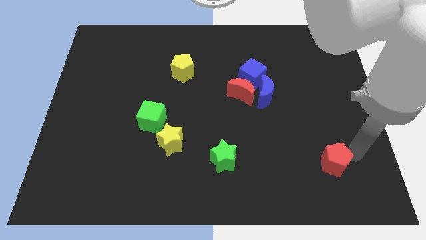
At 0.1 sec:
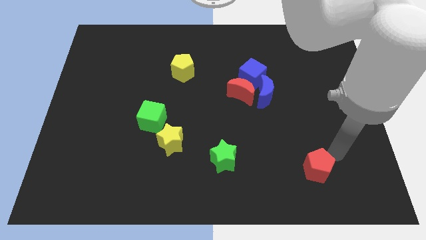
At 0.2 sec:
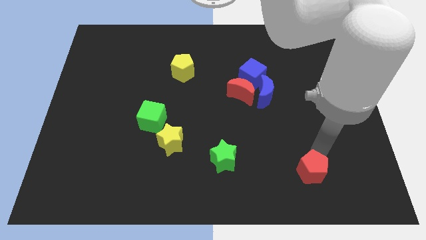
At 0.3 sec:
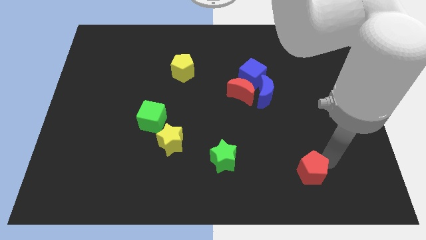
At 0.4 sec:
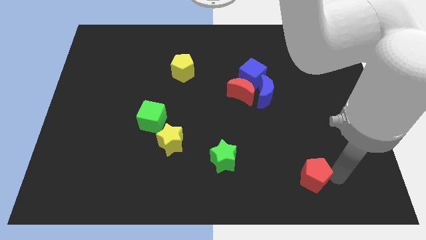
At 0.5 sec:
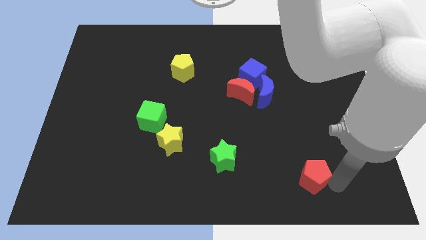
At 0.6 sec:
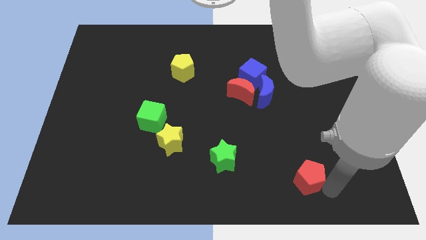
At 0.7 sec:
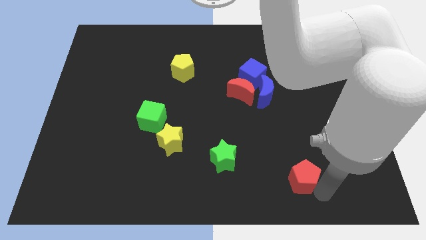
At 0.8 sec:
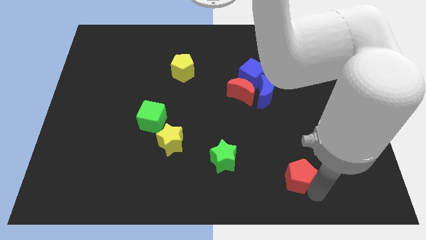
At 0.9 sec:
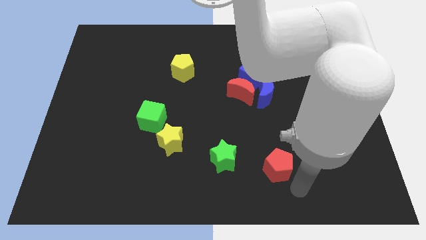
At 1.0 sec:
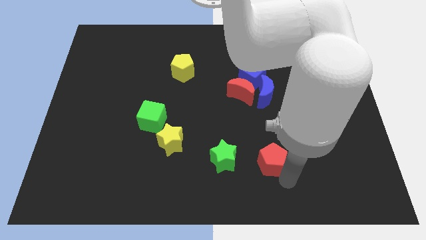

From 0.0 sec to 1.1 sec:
move the red pentagon to the right of the green star

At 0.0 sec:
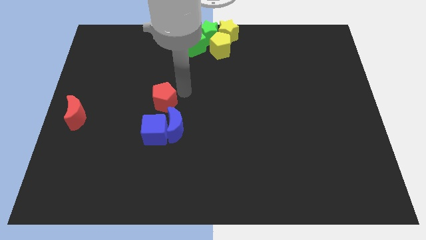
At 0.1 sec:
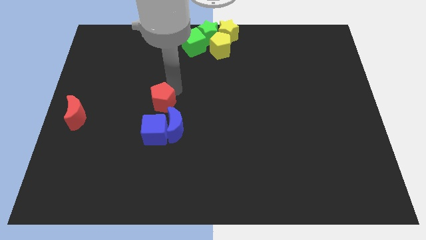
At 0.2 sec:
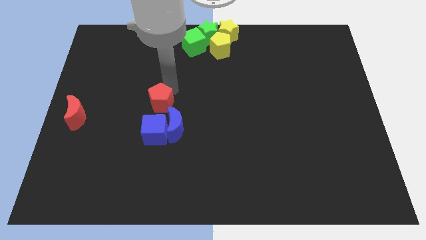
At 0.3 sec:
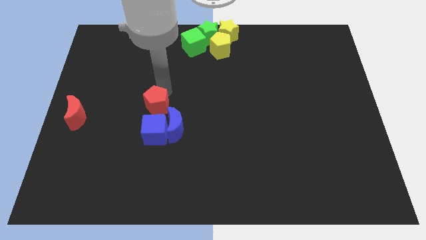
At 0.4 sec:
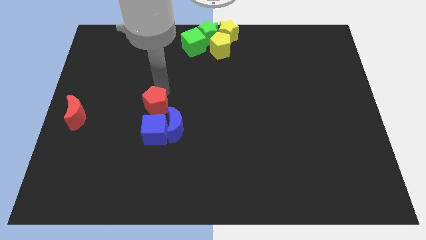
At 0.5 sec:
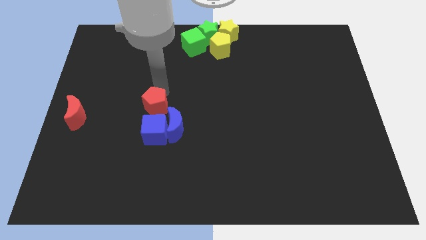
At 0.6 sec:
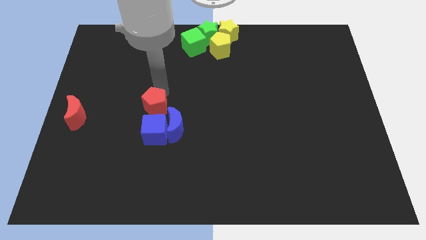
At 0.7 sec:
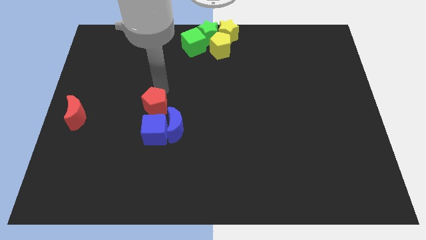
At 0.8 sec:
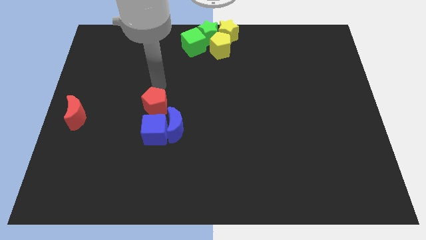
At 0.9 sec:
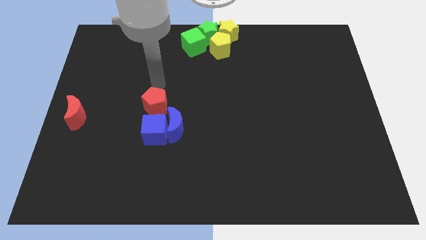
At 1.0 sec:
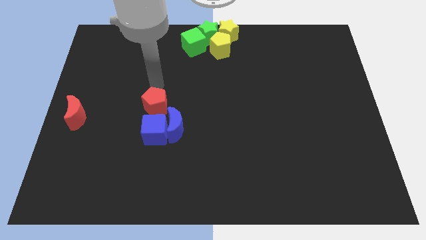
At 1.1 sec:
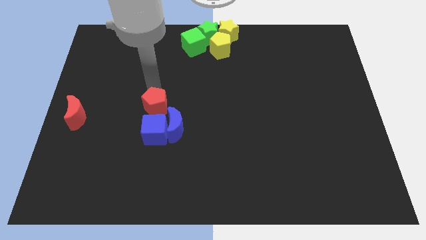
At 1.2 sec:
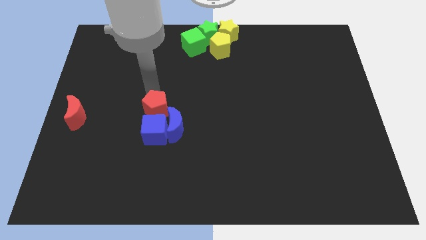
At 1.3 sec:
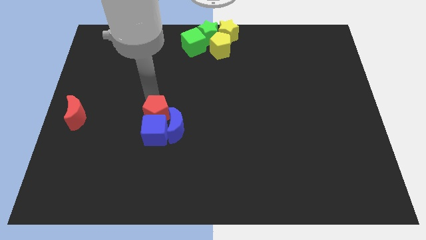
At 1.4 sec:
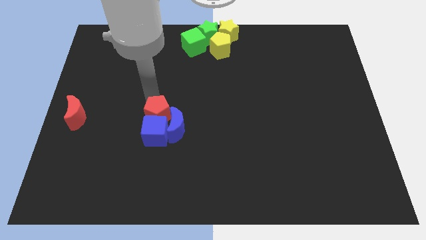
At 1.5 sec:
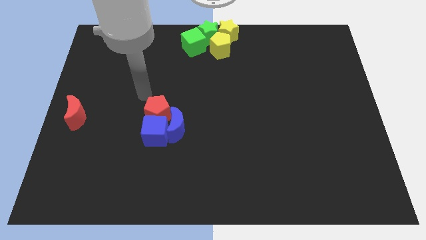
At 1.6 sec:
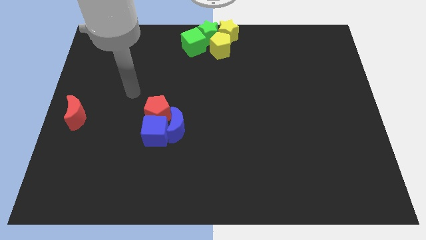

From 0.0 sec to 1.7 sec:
move the red pentagon into the blue cube

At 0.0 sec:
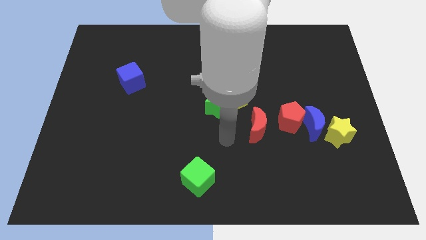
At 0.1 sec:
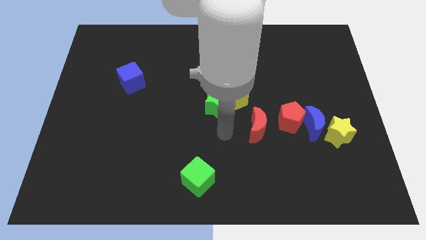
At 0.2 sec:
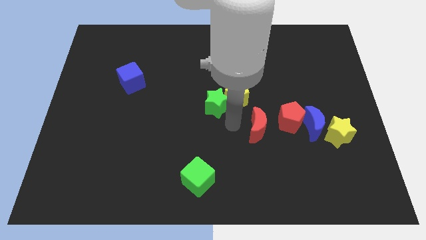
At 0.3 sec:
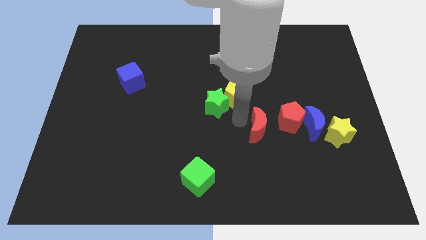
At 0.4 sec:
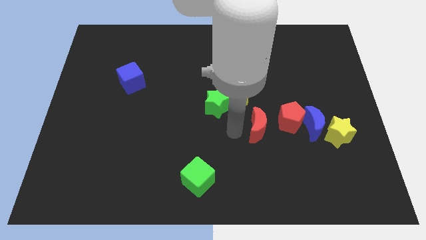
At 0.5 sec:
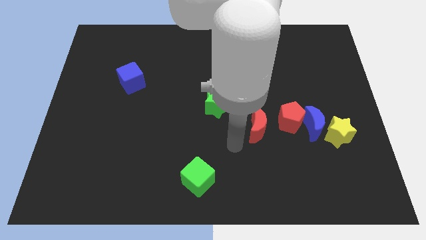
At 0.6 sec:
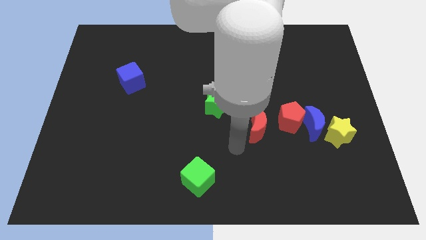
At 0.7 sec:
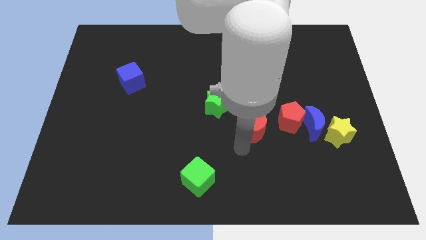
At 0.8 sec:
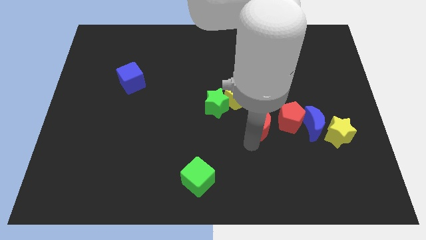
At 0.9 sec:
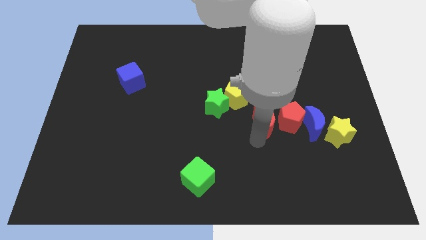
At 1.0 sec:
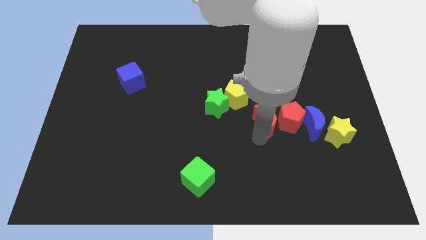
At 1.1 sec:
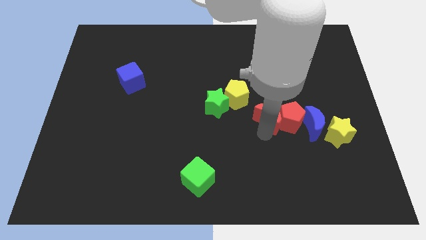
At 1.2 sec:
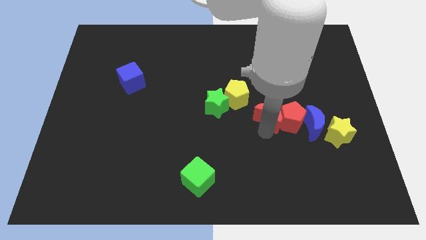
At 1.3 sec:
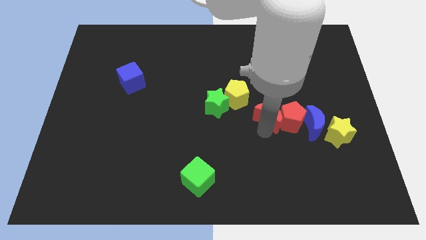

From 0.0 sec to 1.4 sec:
push the red crescent into the red pentagon

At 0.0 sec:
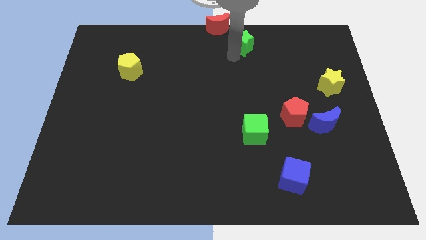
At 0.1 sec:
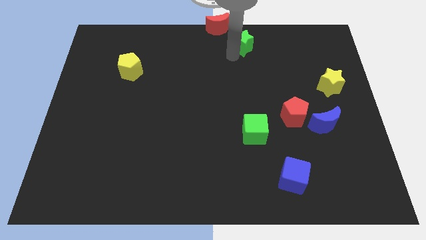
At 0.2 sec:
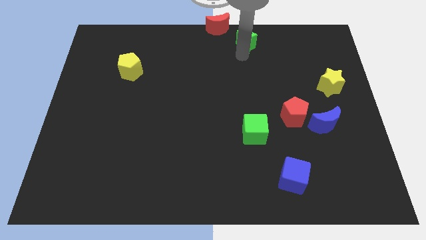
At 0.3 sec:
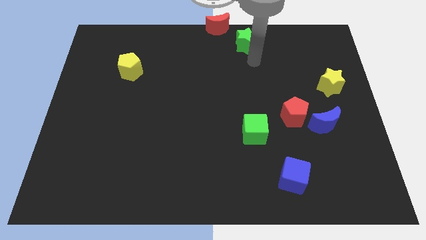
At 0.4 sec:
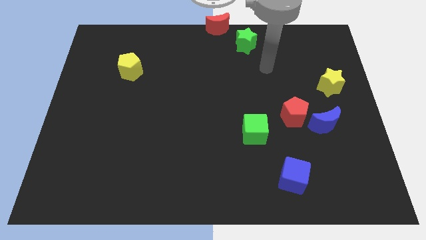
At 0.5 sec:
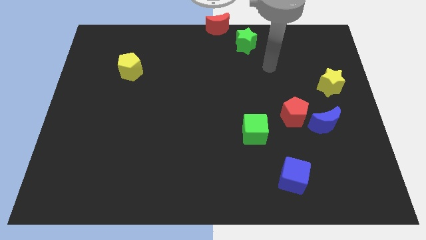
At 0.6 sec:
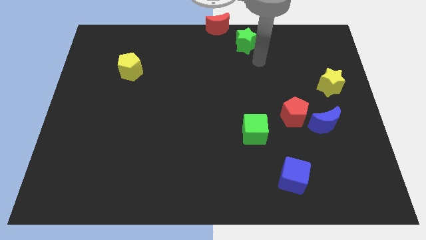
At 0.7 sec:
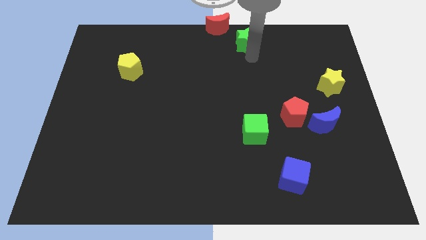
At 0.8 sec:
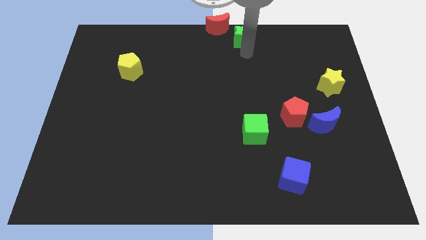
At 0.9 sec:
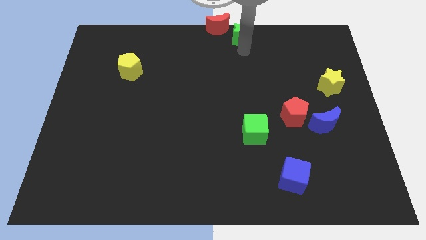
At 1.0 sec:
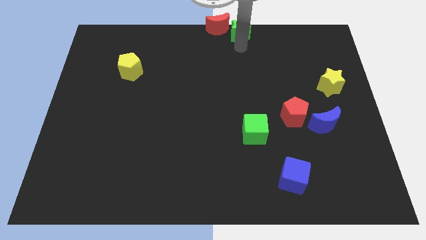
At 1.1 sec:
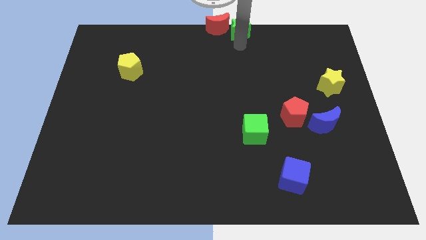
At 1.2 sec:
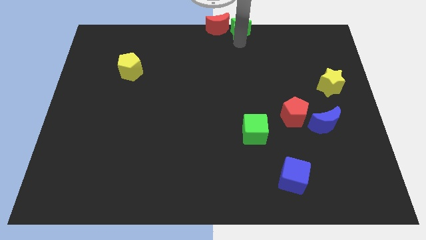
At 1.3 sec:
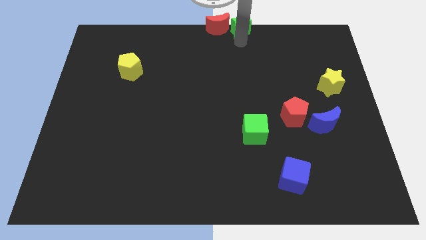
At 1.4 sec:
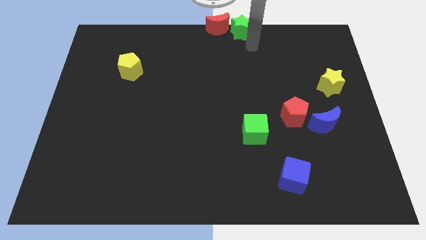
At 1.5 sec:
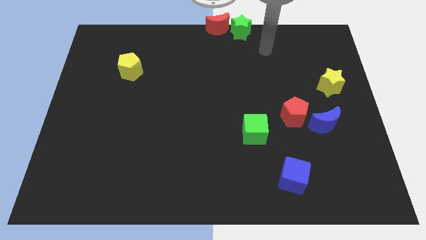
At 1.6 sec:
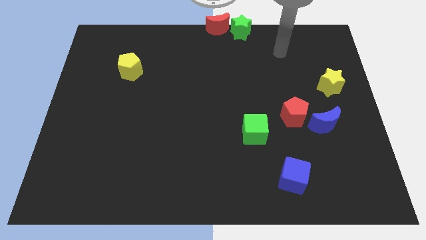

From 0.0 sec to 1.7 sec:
place the green star to the right side of the red crescent

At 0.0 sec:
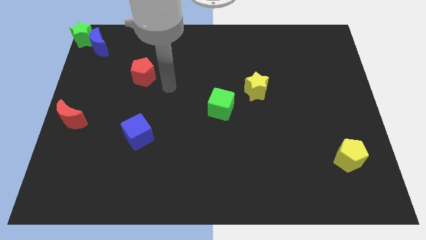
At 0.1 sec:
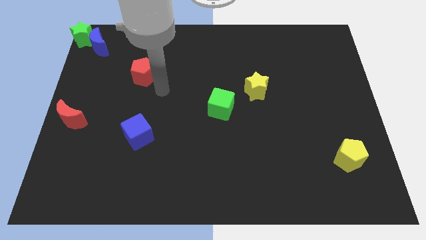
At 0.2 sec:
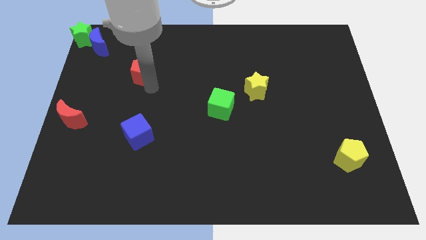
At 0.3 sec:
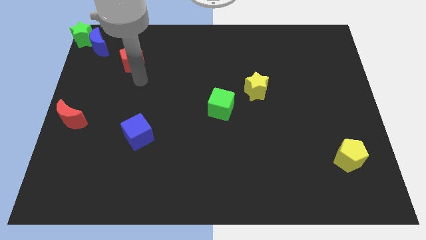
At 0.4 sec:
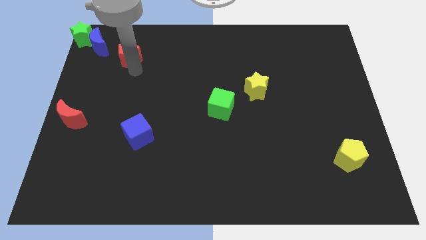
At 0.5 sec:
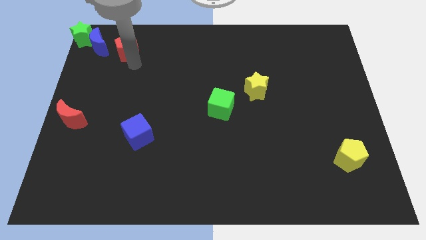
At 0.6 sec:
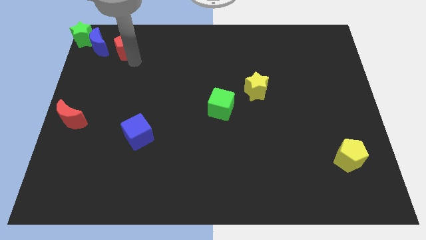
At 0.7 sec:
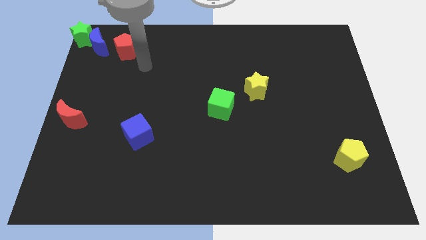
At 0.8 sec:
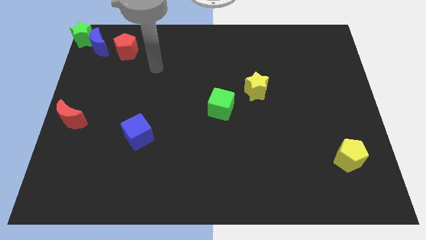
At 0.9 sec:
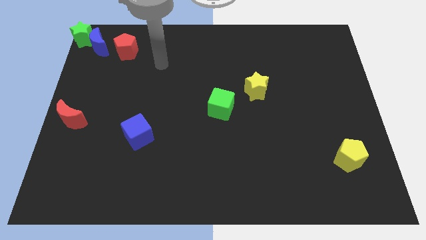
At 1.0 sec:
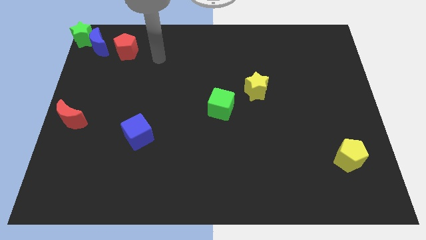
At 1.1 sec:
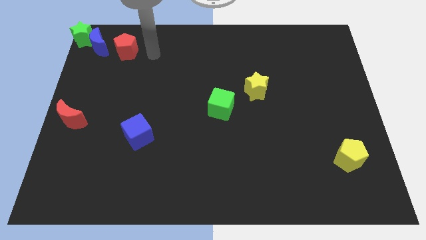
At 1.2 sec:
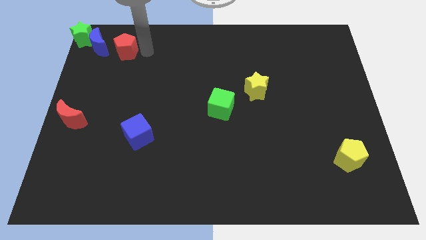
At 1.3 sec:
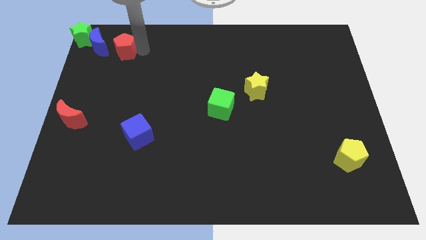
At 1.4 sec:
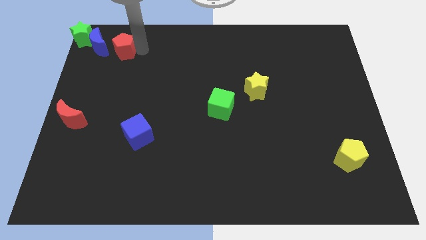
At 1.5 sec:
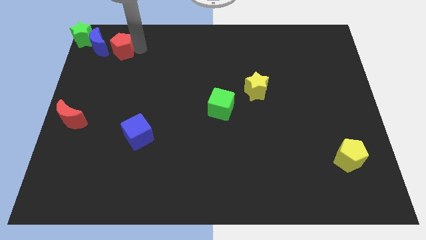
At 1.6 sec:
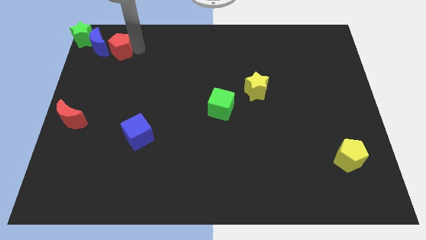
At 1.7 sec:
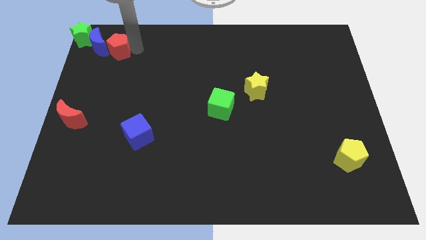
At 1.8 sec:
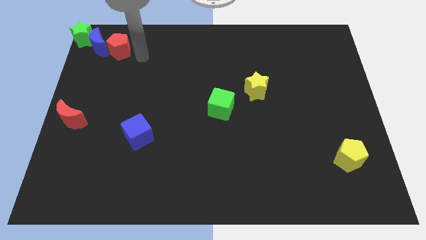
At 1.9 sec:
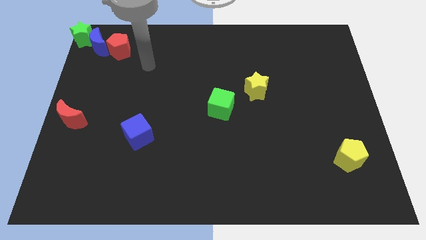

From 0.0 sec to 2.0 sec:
move the red pentagon to the right of the blue moon

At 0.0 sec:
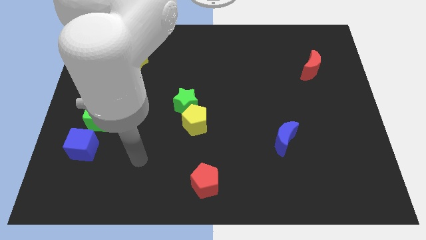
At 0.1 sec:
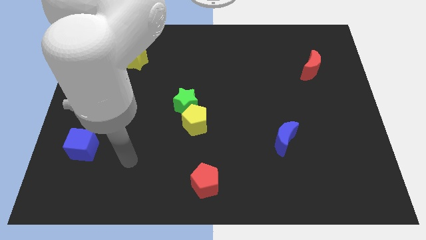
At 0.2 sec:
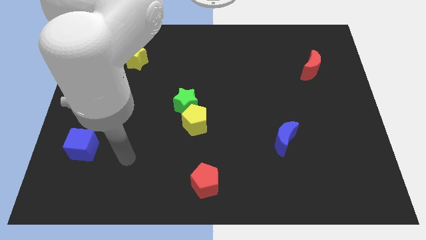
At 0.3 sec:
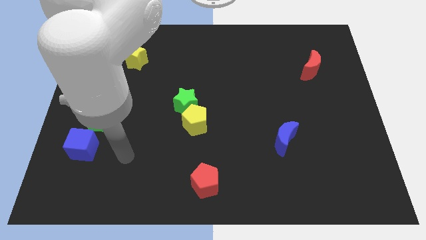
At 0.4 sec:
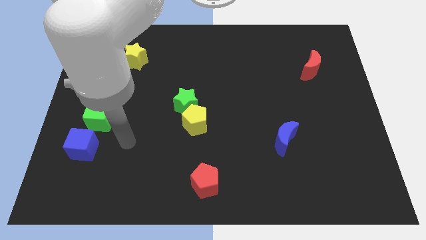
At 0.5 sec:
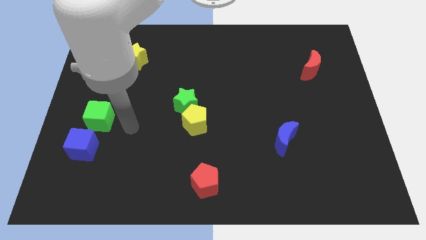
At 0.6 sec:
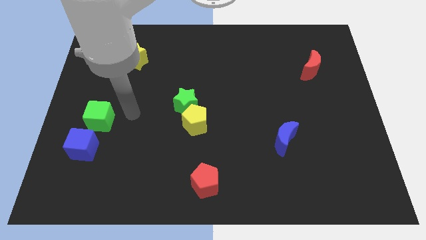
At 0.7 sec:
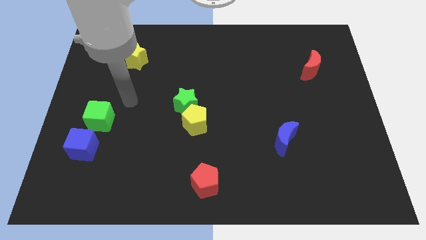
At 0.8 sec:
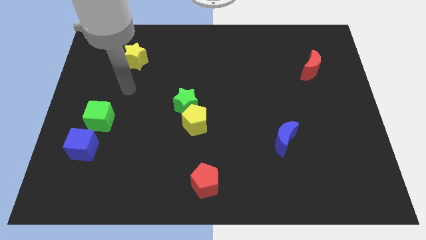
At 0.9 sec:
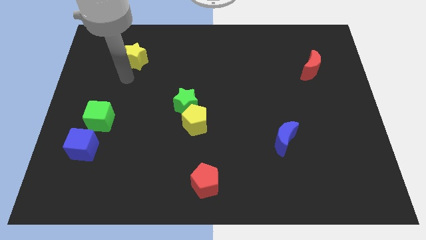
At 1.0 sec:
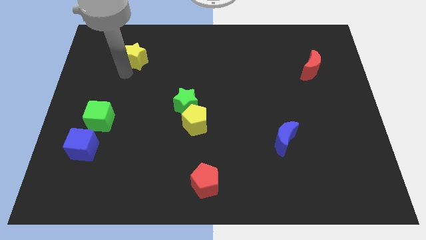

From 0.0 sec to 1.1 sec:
move arm to the bottom of yellow star
